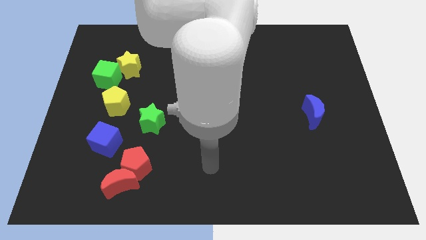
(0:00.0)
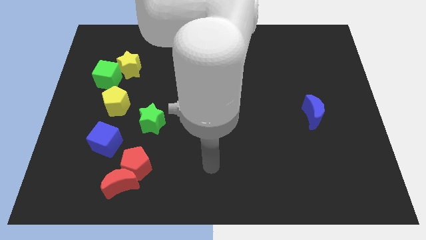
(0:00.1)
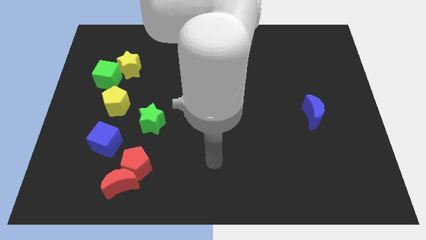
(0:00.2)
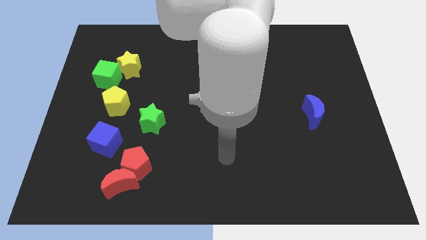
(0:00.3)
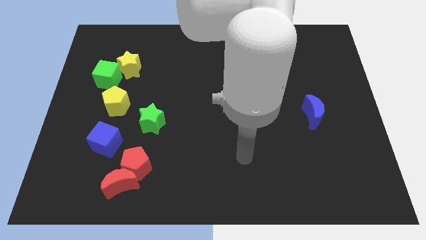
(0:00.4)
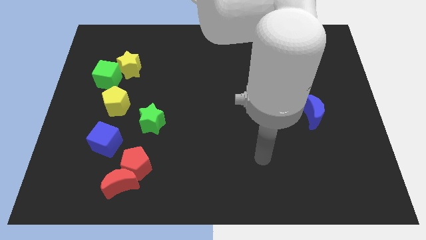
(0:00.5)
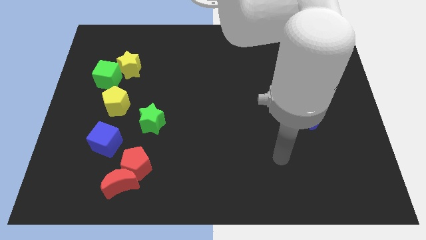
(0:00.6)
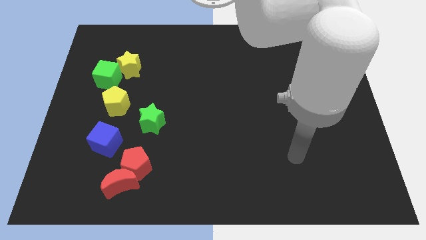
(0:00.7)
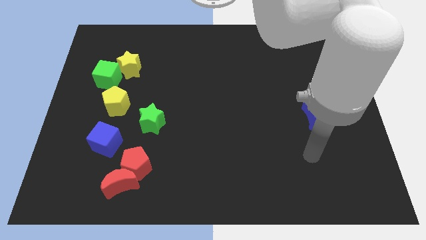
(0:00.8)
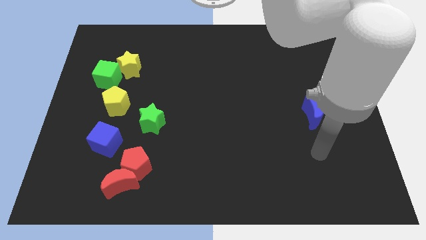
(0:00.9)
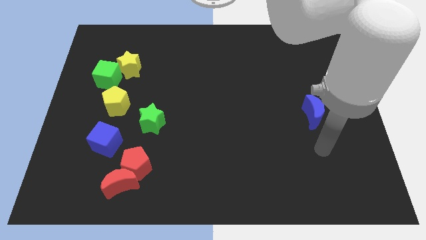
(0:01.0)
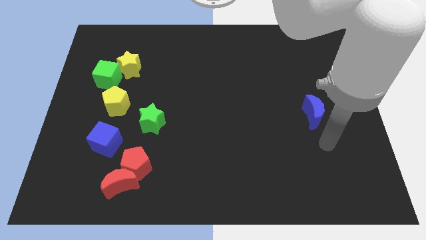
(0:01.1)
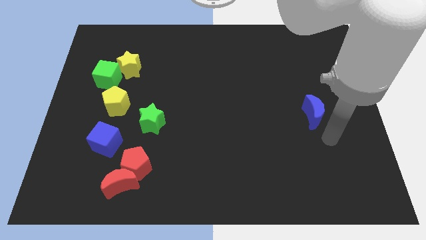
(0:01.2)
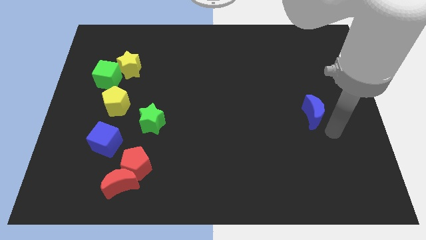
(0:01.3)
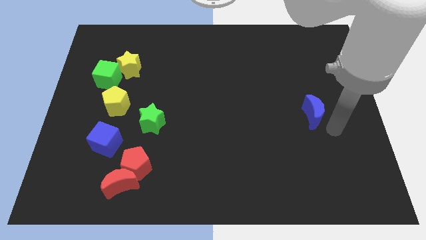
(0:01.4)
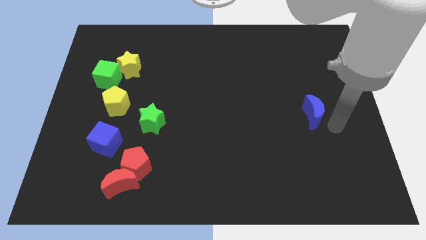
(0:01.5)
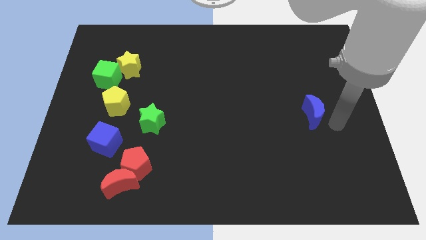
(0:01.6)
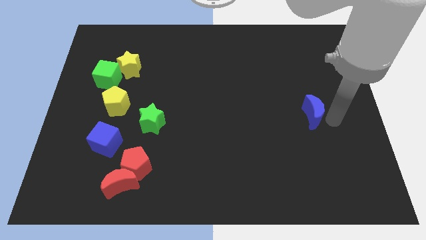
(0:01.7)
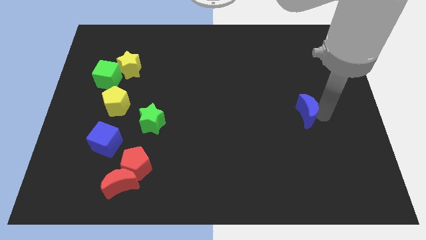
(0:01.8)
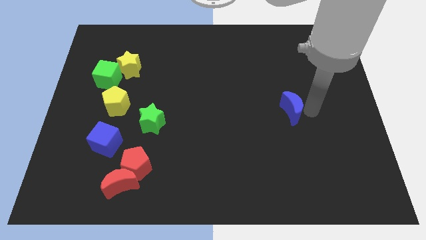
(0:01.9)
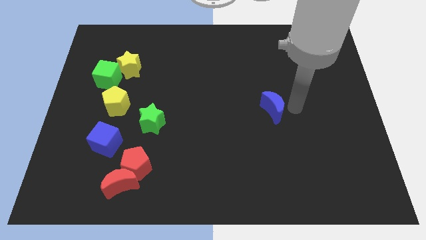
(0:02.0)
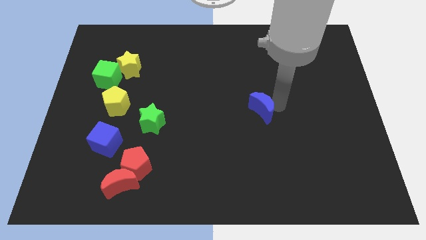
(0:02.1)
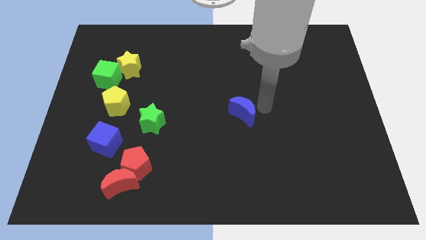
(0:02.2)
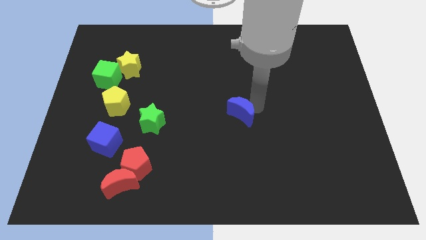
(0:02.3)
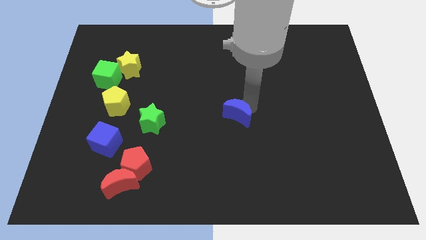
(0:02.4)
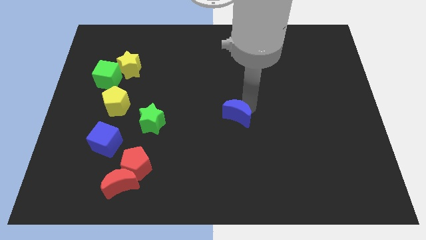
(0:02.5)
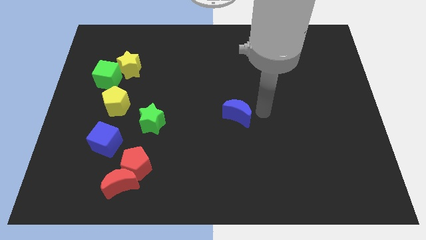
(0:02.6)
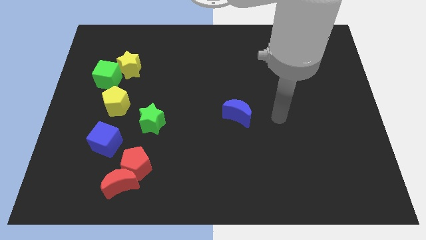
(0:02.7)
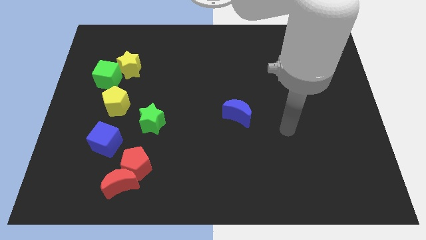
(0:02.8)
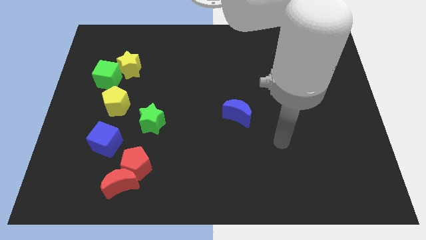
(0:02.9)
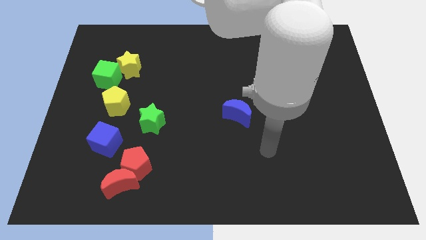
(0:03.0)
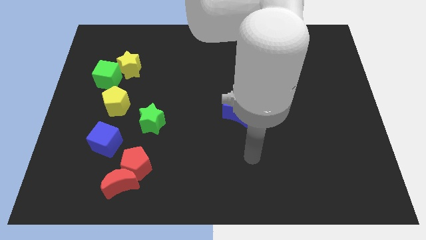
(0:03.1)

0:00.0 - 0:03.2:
place the blue moon at the center of the board

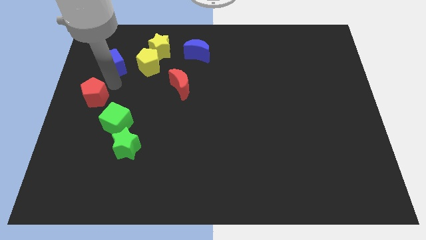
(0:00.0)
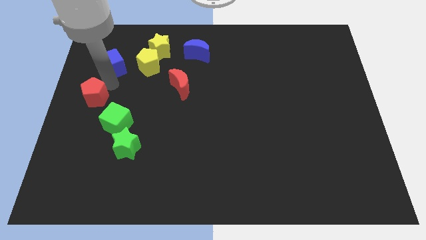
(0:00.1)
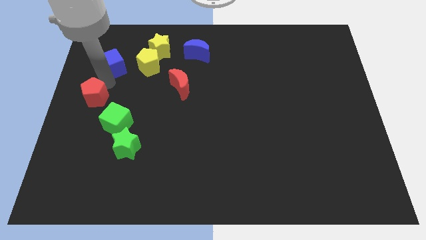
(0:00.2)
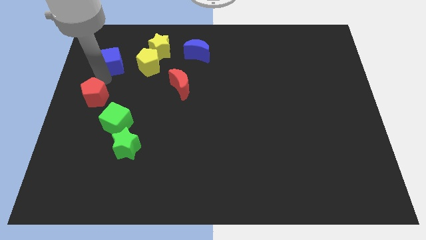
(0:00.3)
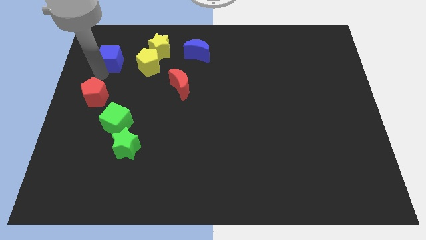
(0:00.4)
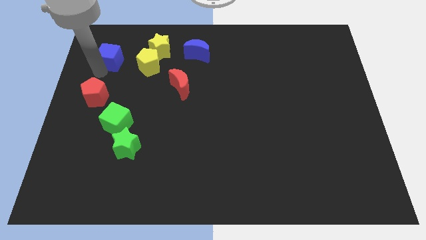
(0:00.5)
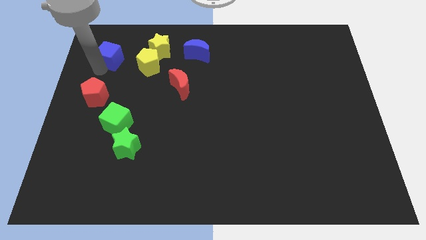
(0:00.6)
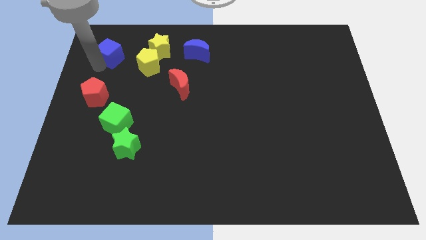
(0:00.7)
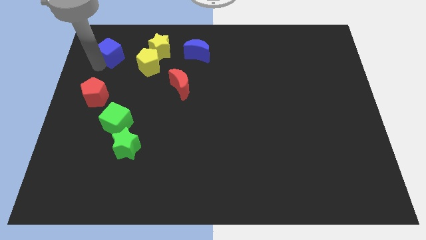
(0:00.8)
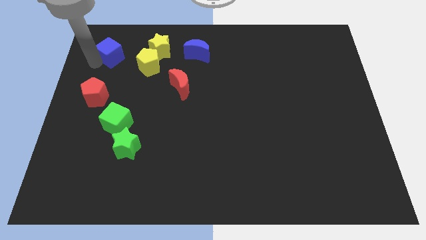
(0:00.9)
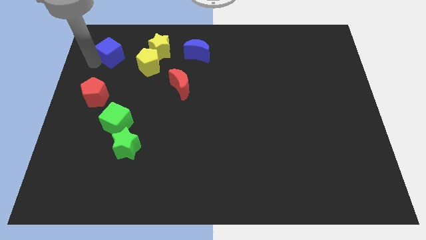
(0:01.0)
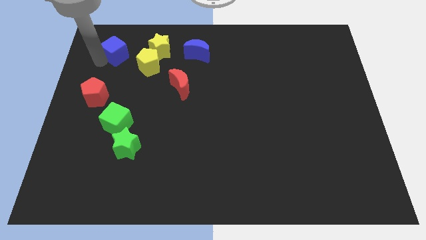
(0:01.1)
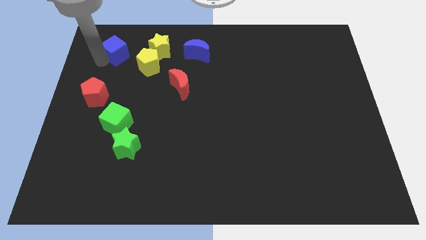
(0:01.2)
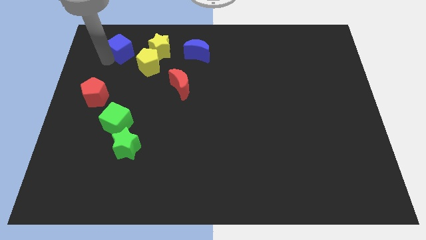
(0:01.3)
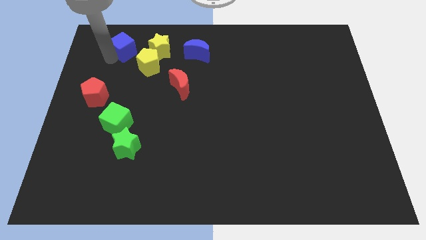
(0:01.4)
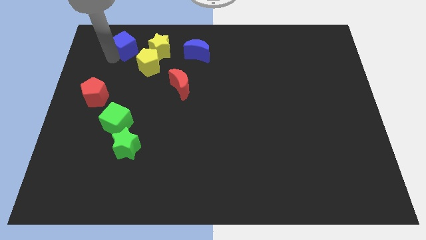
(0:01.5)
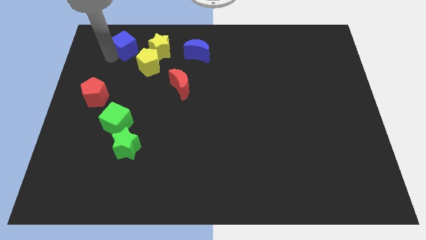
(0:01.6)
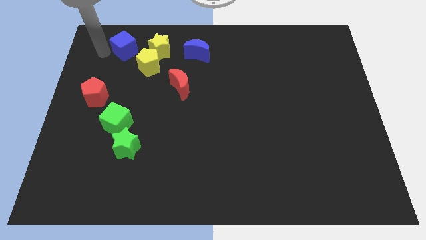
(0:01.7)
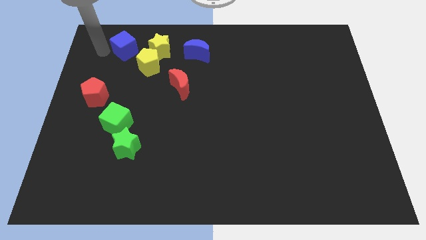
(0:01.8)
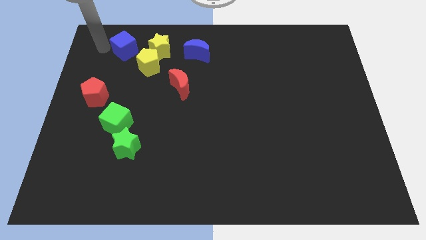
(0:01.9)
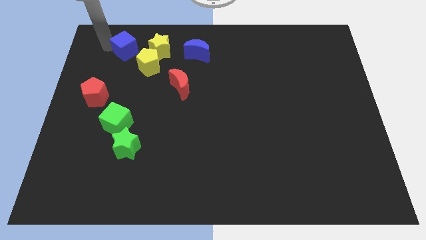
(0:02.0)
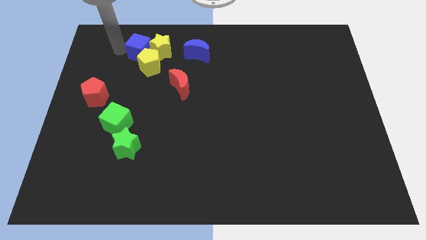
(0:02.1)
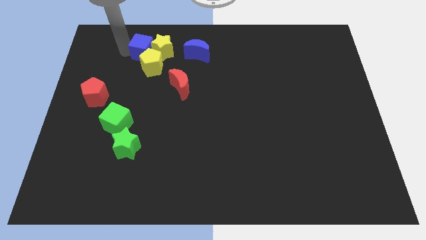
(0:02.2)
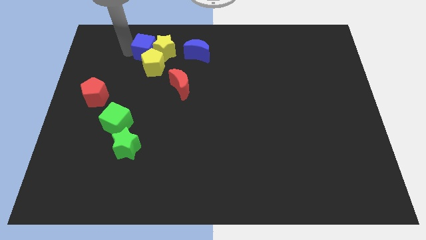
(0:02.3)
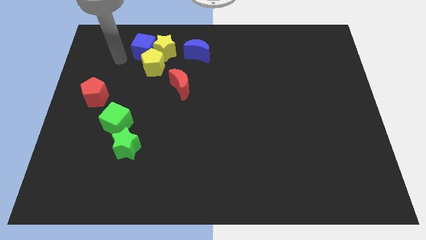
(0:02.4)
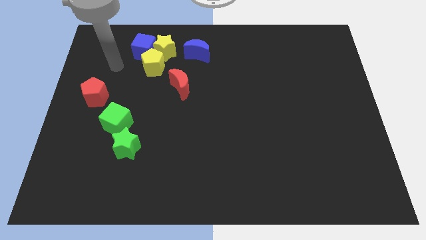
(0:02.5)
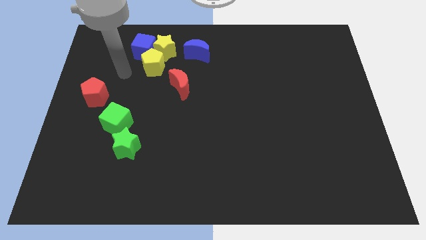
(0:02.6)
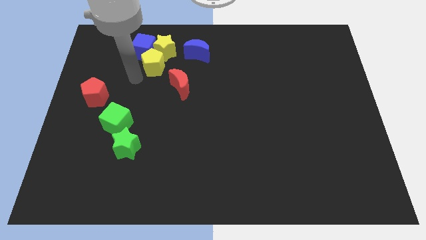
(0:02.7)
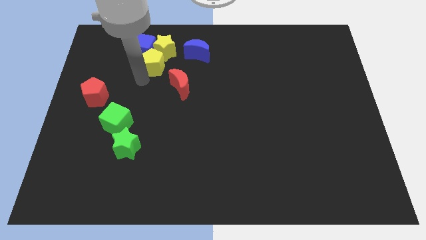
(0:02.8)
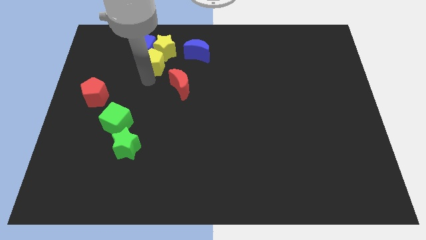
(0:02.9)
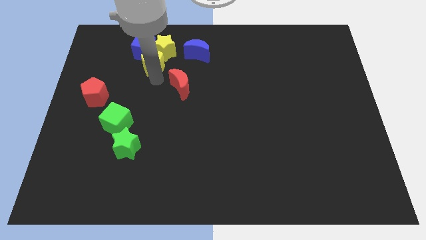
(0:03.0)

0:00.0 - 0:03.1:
push the blue cube into the yellow pentagon

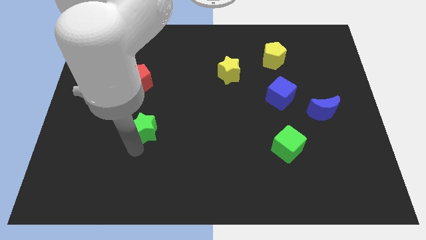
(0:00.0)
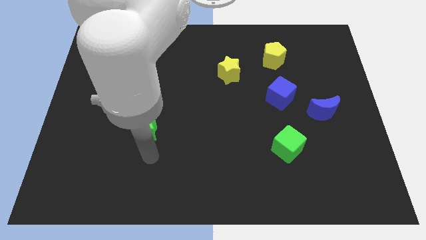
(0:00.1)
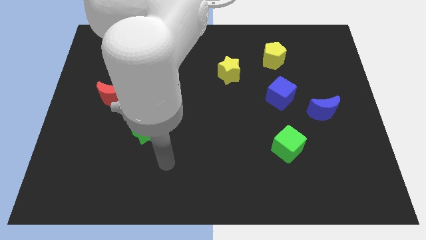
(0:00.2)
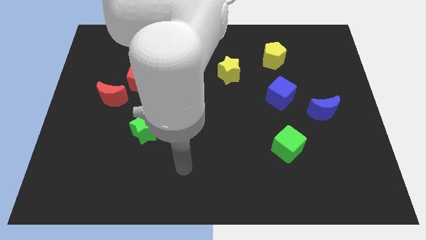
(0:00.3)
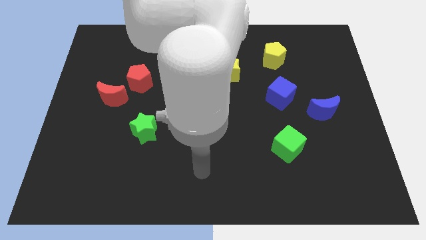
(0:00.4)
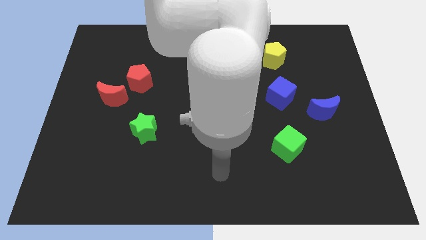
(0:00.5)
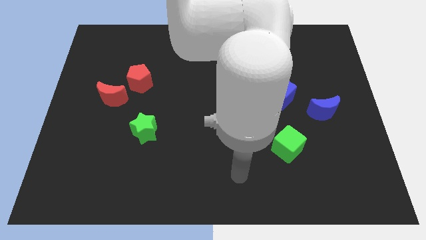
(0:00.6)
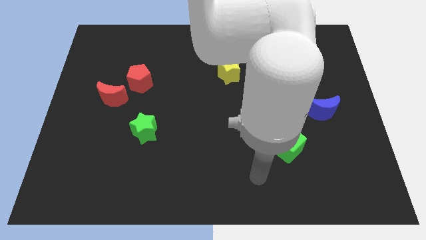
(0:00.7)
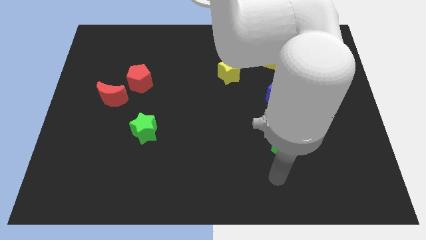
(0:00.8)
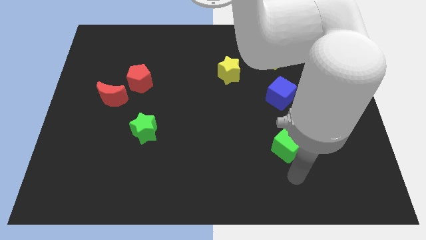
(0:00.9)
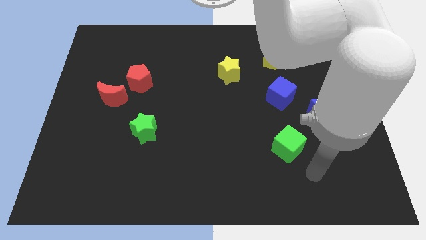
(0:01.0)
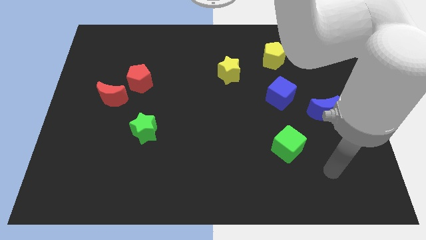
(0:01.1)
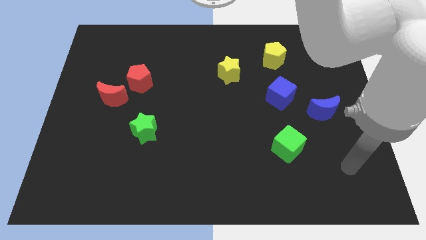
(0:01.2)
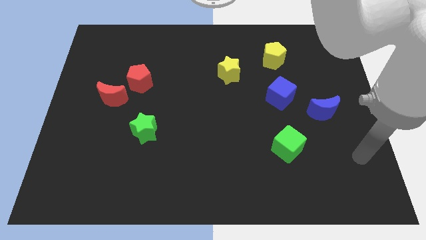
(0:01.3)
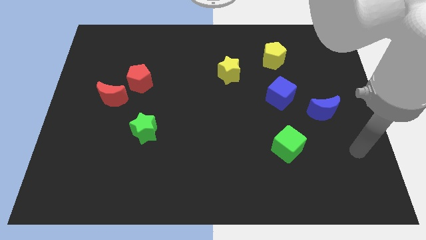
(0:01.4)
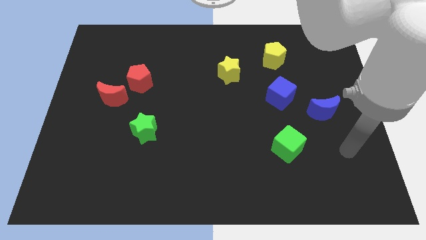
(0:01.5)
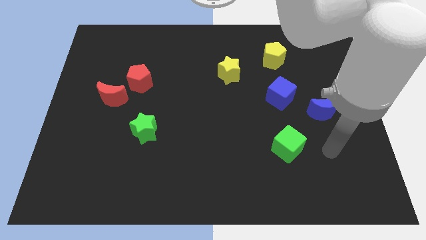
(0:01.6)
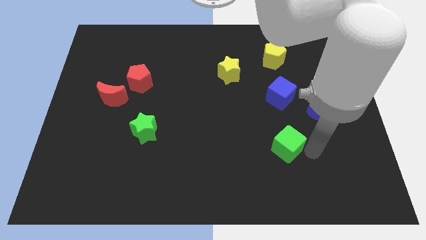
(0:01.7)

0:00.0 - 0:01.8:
move your arm from green star to the right of the green cube

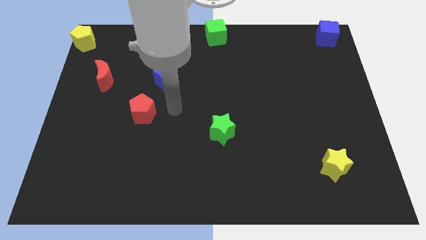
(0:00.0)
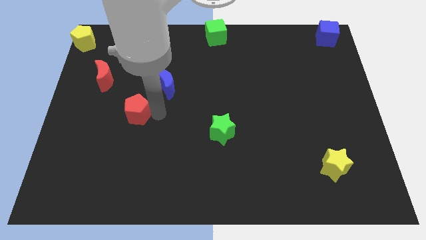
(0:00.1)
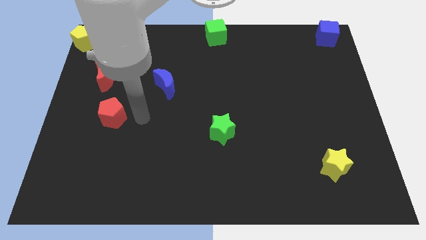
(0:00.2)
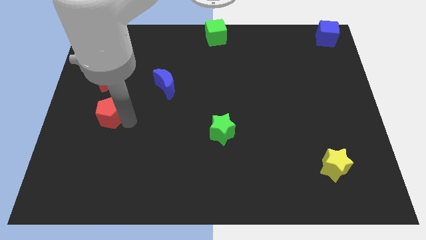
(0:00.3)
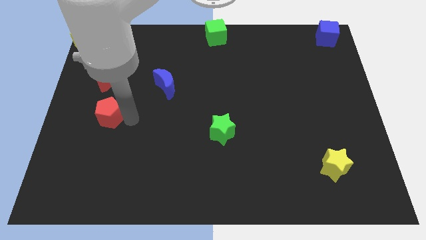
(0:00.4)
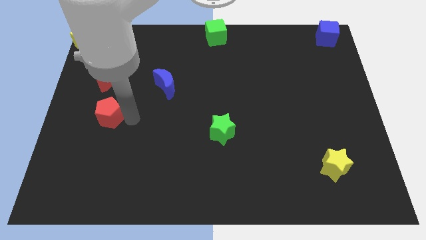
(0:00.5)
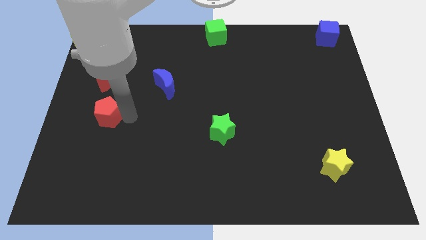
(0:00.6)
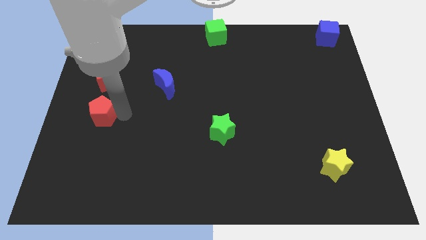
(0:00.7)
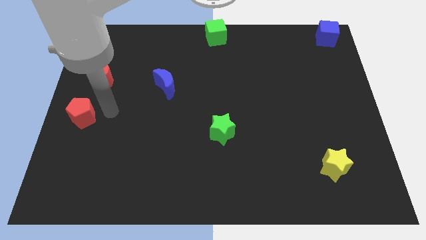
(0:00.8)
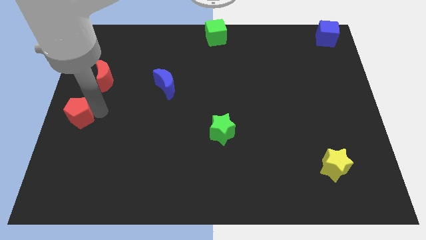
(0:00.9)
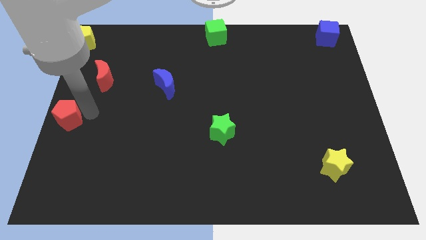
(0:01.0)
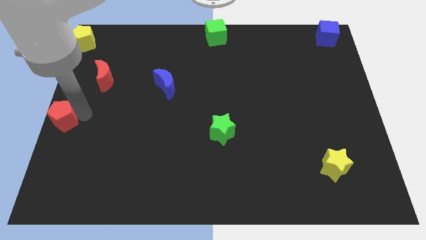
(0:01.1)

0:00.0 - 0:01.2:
slide the red pentagon diagonally bottom left to the red moon
